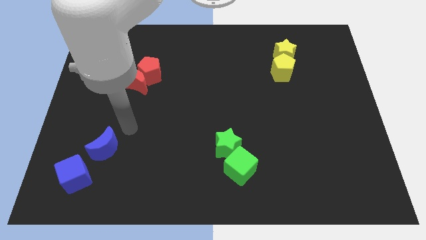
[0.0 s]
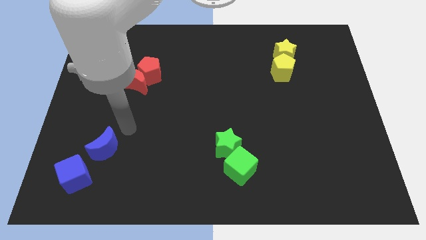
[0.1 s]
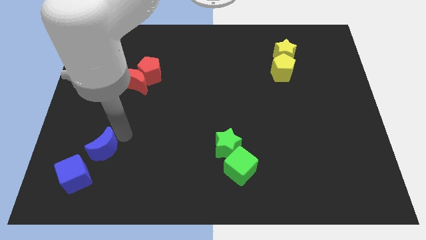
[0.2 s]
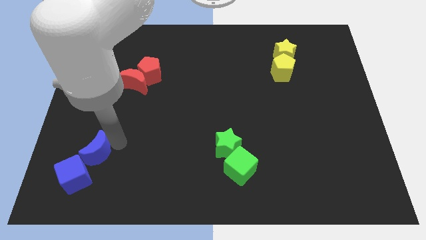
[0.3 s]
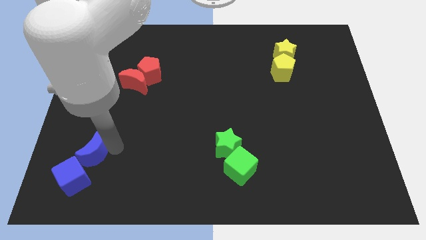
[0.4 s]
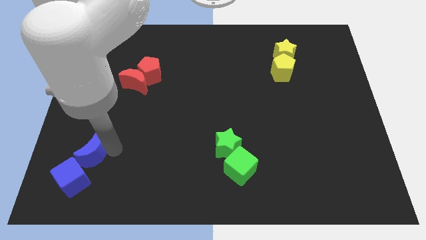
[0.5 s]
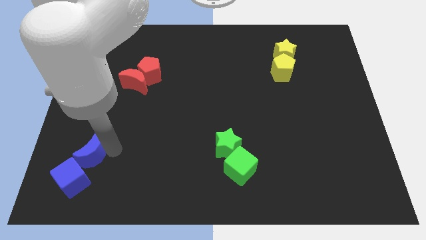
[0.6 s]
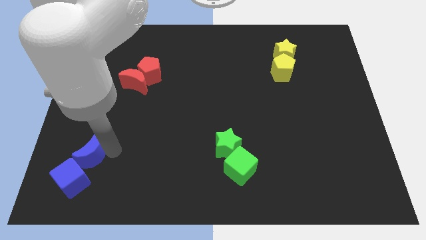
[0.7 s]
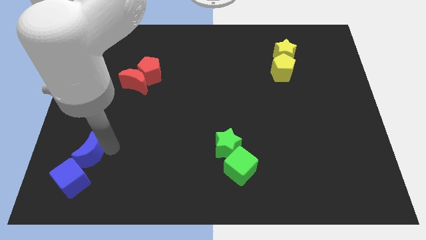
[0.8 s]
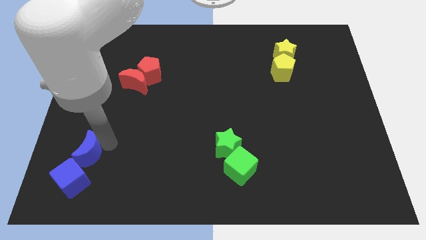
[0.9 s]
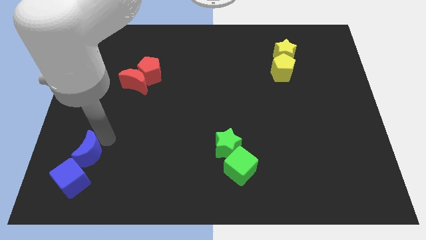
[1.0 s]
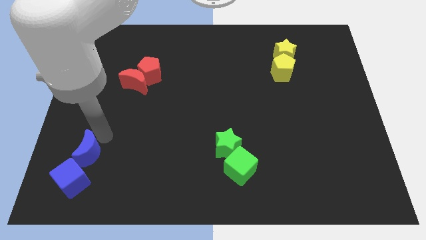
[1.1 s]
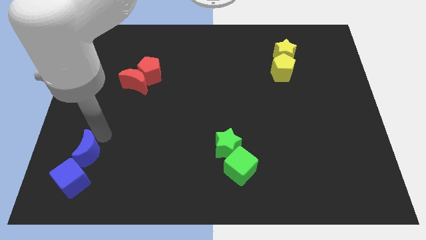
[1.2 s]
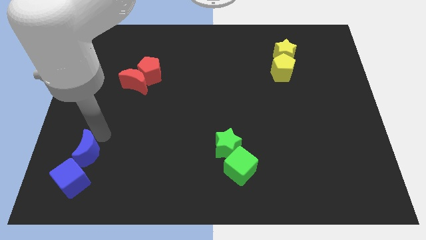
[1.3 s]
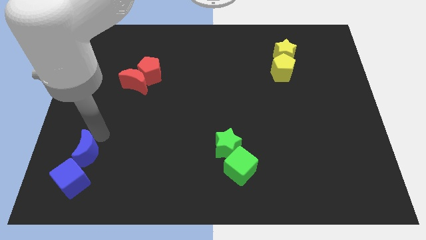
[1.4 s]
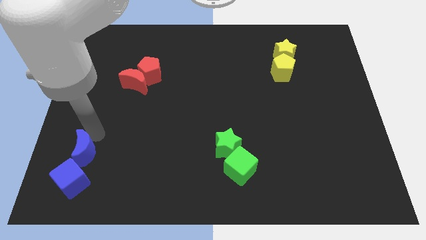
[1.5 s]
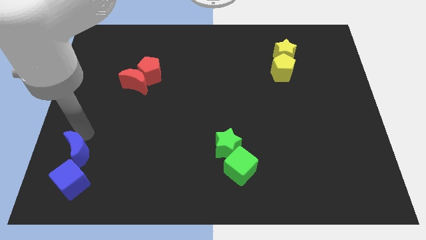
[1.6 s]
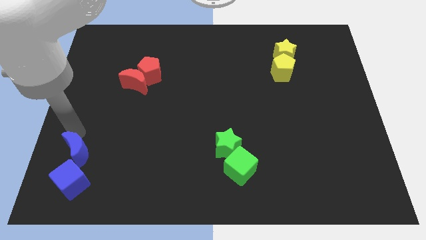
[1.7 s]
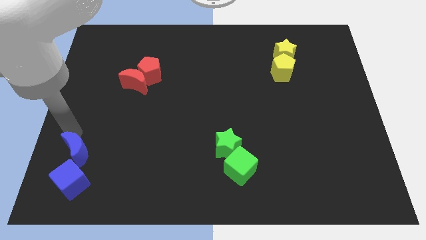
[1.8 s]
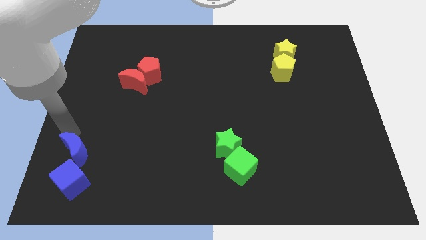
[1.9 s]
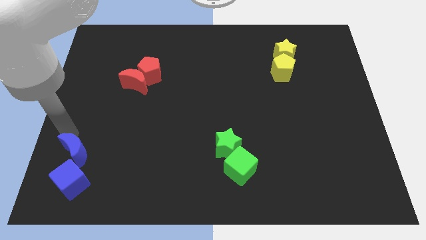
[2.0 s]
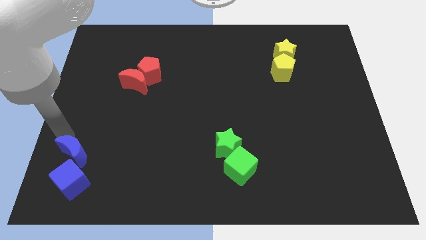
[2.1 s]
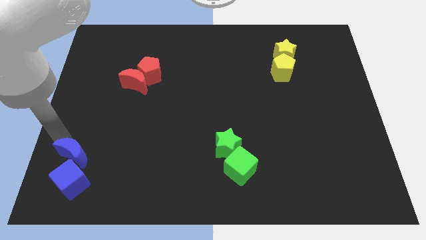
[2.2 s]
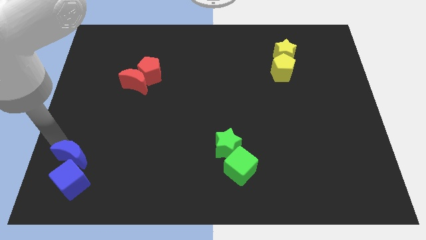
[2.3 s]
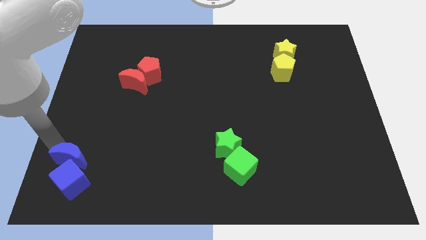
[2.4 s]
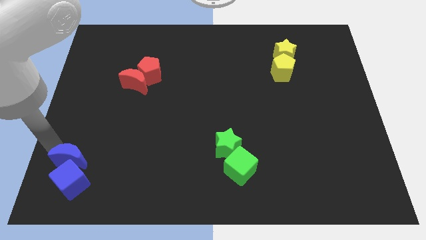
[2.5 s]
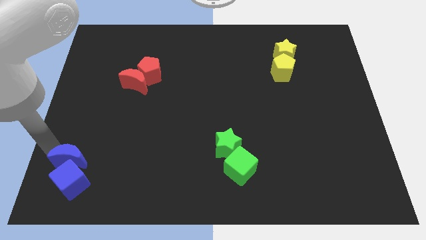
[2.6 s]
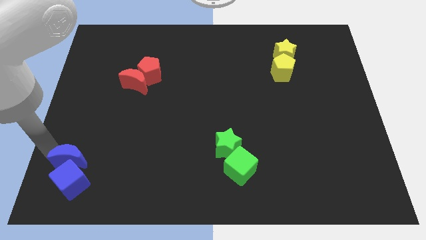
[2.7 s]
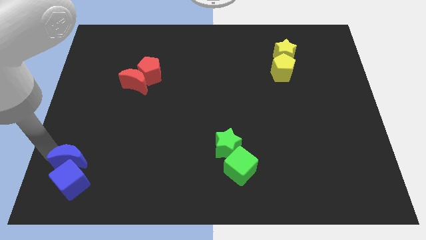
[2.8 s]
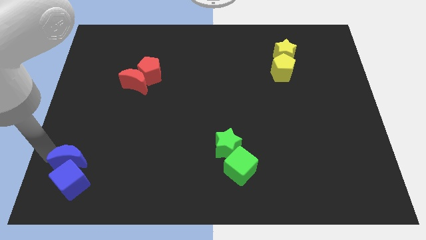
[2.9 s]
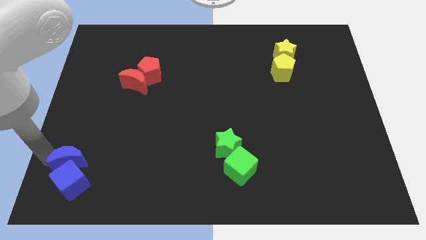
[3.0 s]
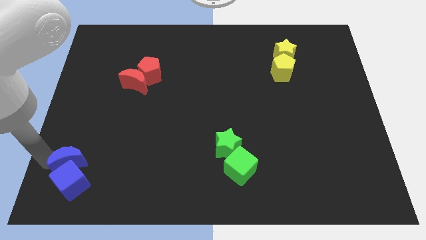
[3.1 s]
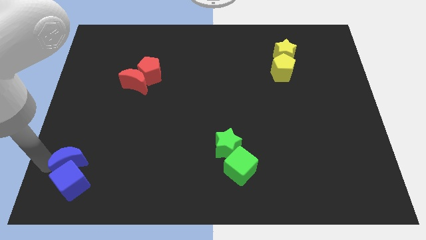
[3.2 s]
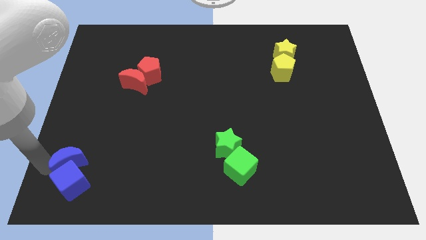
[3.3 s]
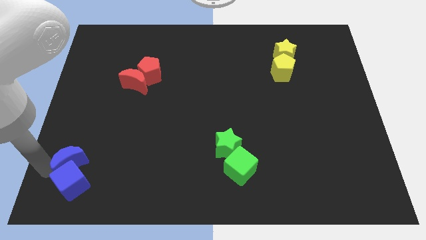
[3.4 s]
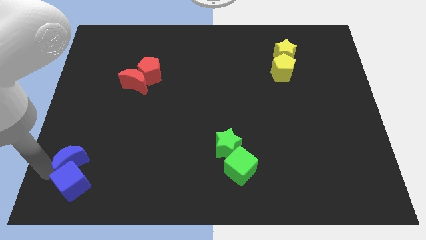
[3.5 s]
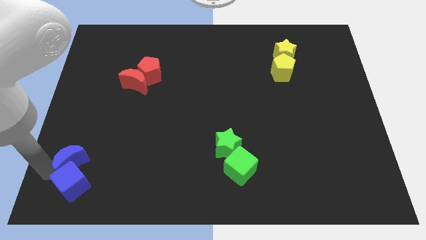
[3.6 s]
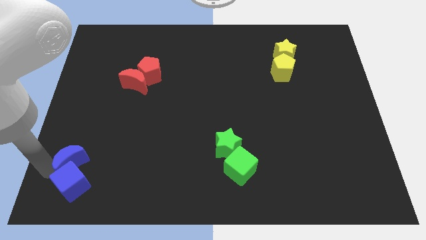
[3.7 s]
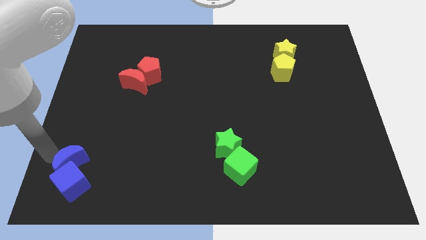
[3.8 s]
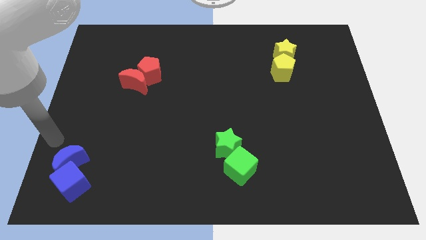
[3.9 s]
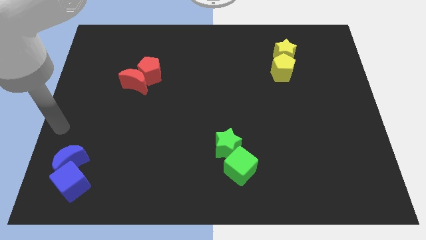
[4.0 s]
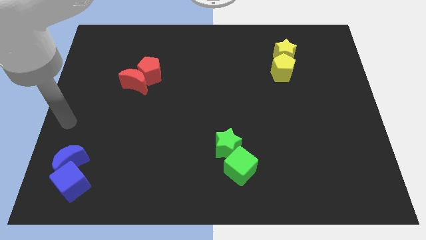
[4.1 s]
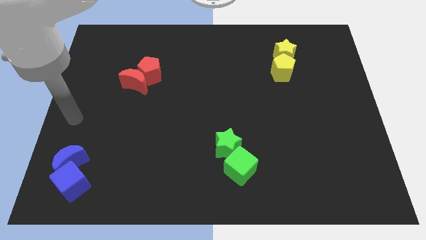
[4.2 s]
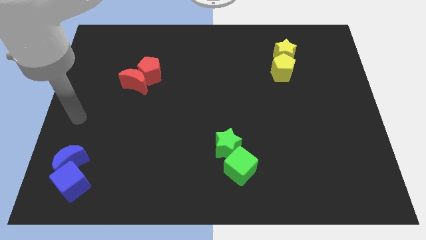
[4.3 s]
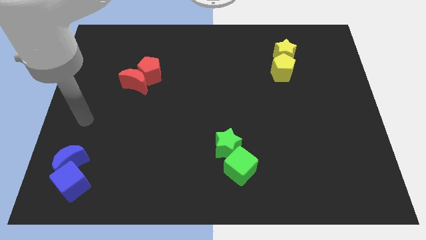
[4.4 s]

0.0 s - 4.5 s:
move your arm away from from the blocks

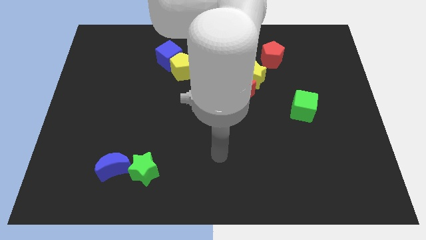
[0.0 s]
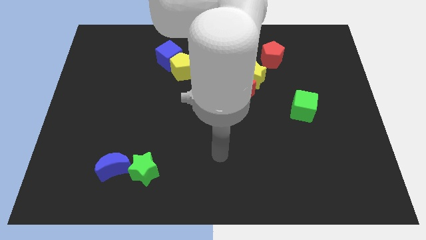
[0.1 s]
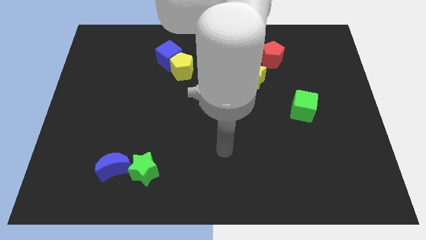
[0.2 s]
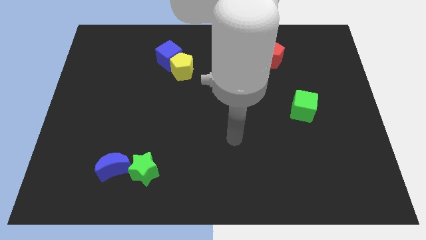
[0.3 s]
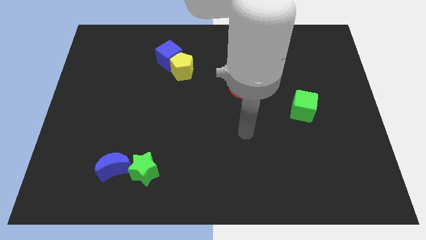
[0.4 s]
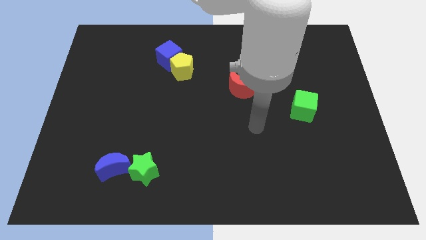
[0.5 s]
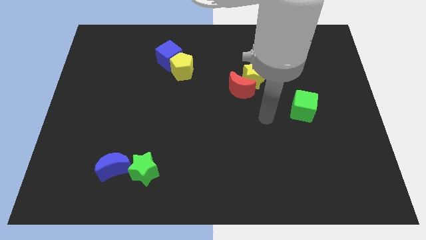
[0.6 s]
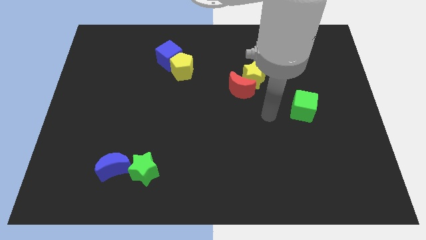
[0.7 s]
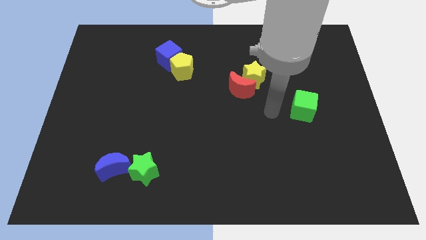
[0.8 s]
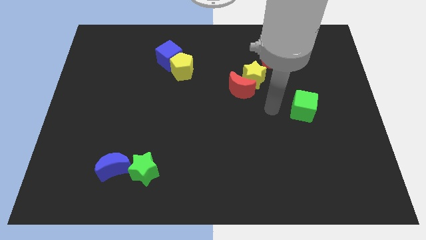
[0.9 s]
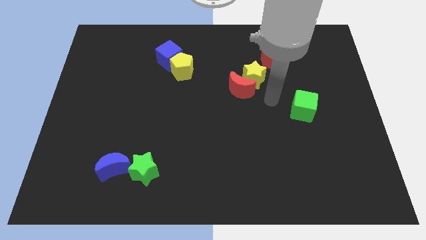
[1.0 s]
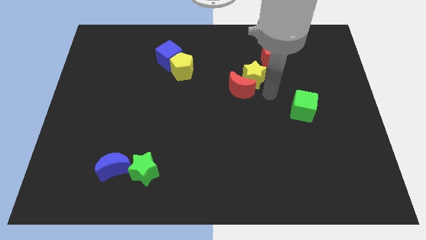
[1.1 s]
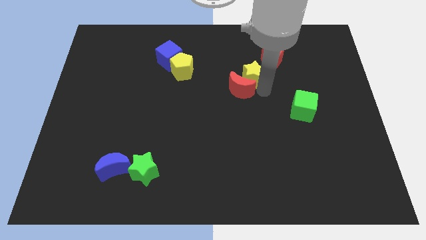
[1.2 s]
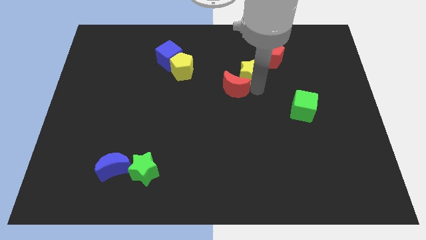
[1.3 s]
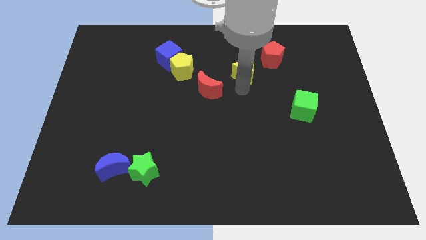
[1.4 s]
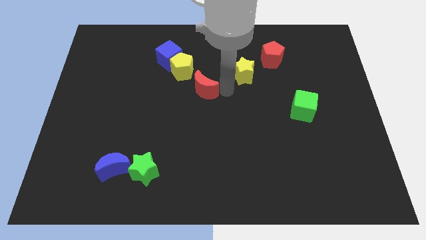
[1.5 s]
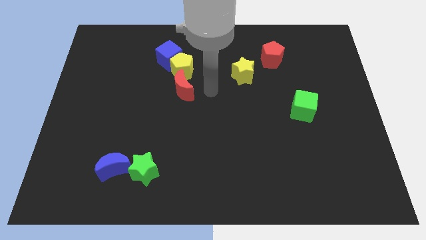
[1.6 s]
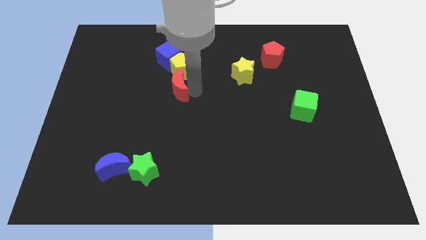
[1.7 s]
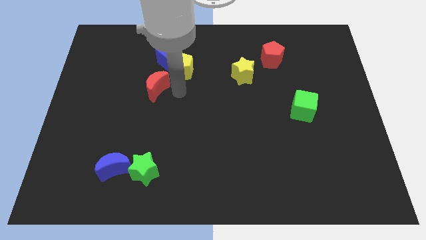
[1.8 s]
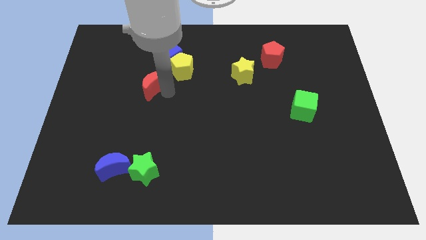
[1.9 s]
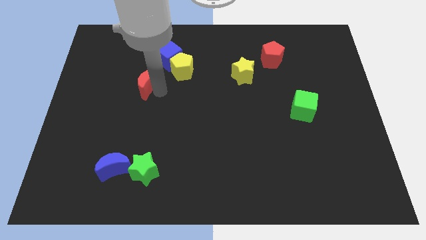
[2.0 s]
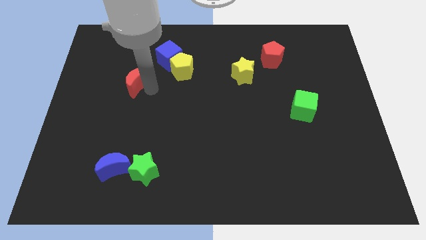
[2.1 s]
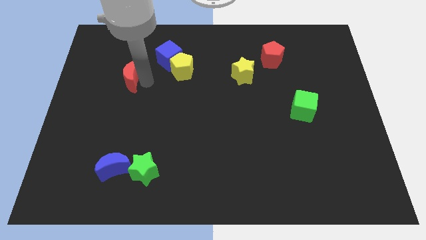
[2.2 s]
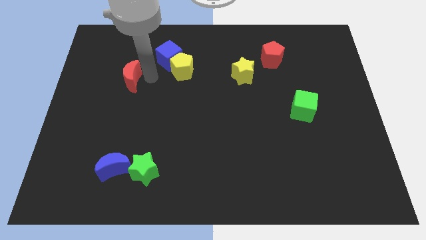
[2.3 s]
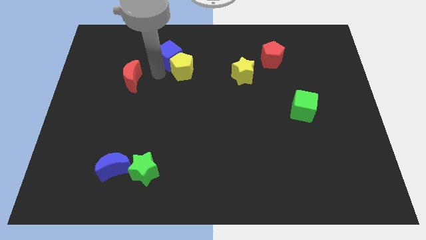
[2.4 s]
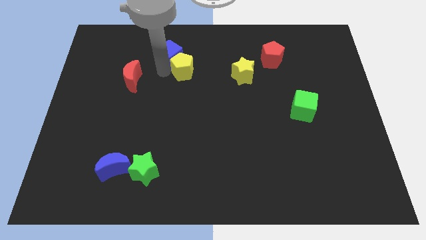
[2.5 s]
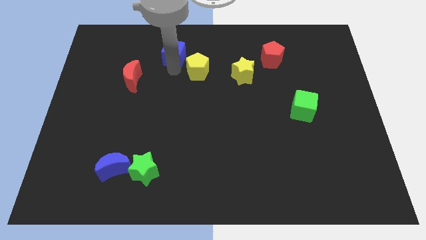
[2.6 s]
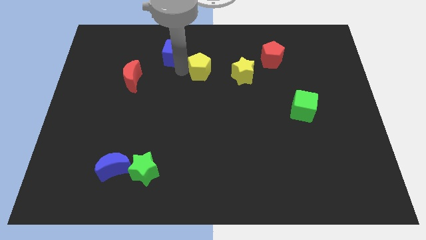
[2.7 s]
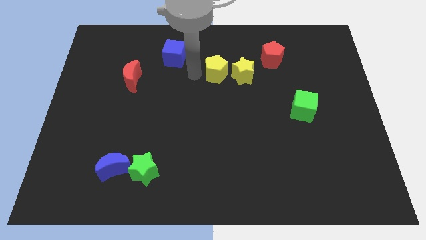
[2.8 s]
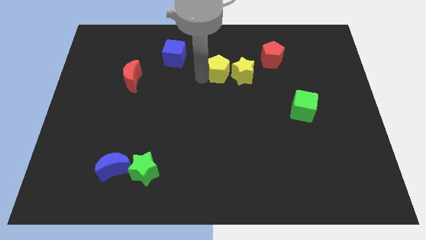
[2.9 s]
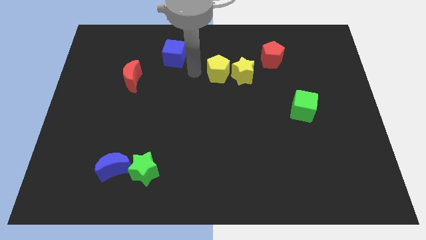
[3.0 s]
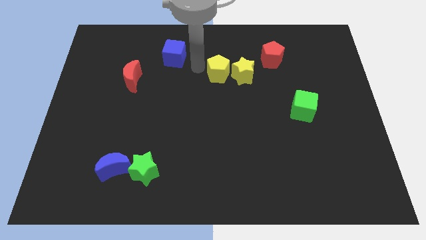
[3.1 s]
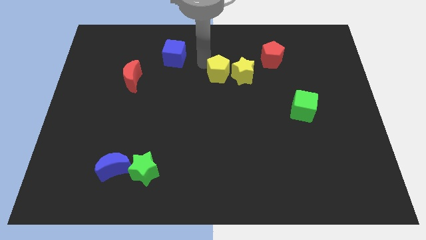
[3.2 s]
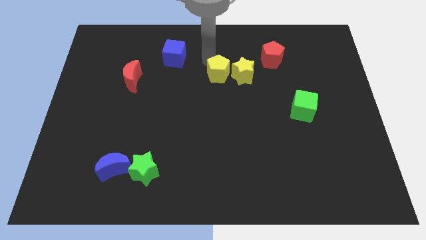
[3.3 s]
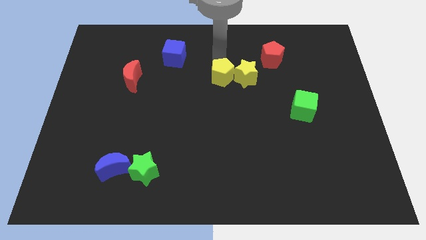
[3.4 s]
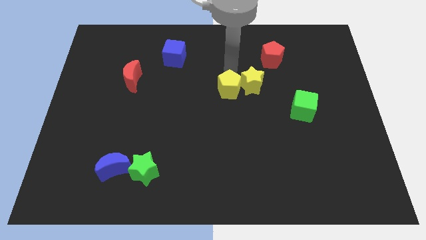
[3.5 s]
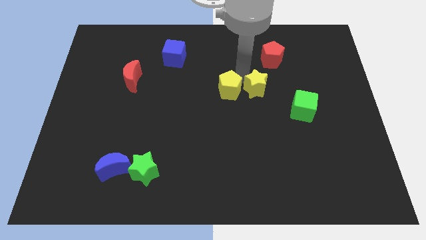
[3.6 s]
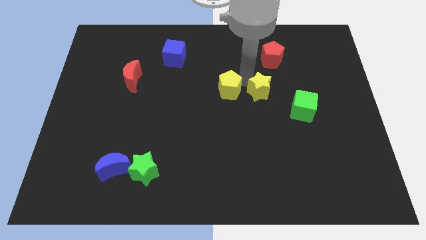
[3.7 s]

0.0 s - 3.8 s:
separate the blocks to place yellow blocks together

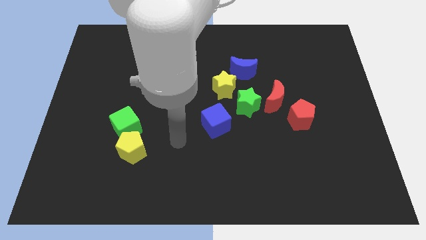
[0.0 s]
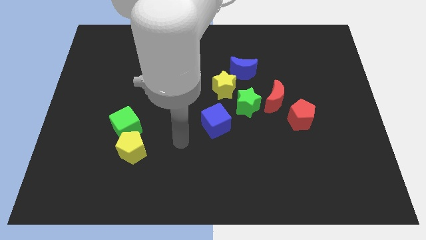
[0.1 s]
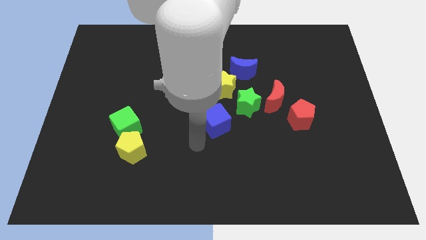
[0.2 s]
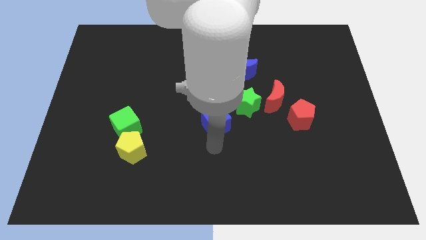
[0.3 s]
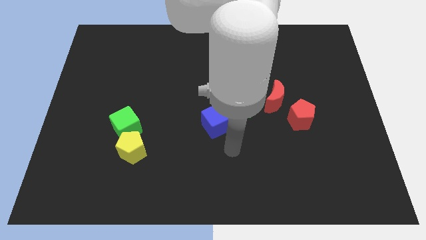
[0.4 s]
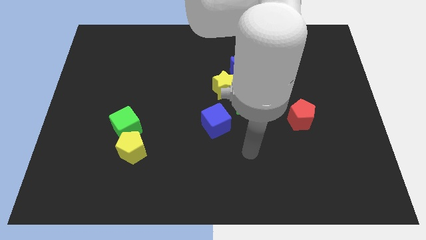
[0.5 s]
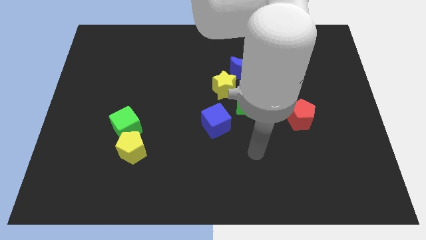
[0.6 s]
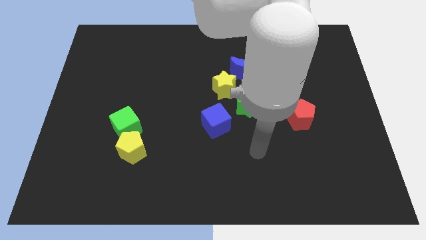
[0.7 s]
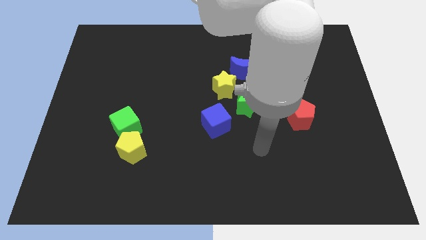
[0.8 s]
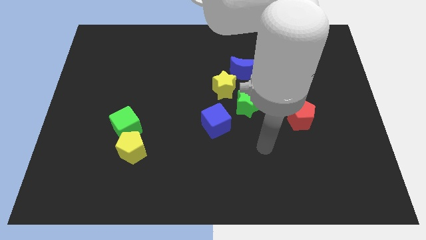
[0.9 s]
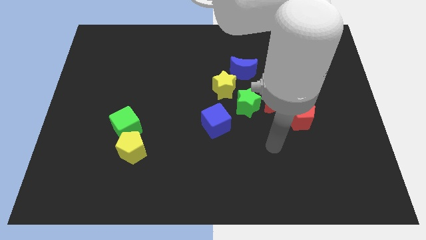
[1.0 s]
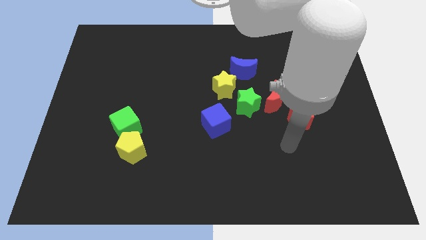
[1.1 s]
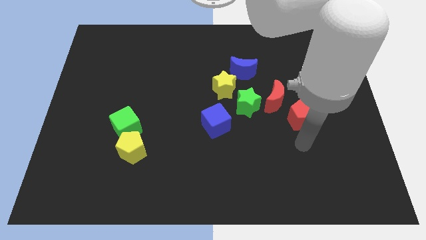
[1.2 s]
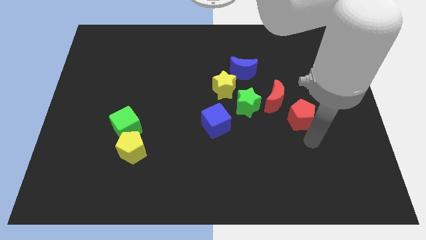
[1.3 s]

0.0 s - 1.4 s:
move your arm towards the bottom of the red pentagon
